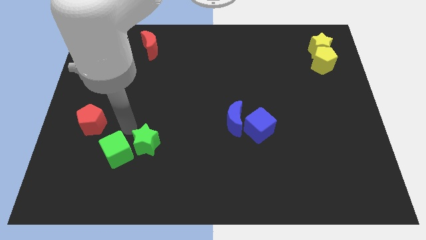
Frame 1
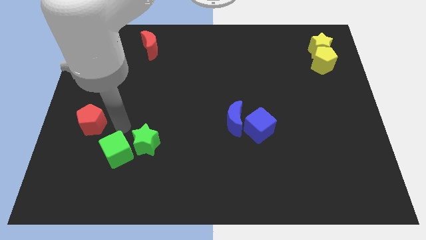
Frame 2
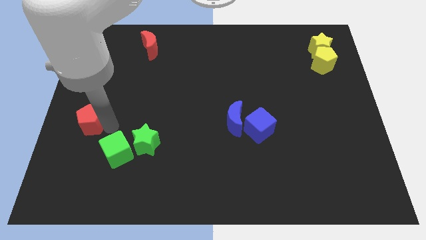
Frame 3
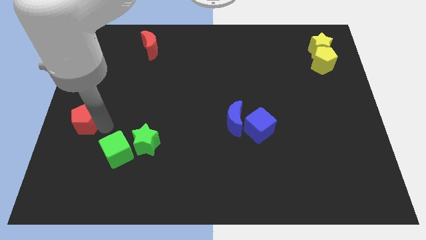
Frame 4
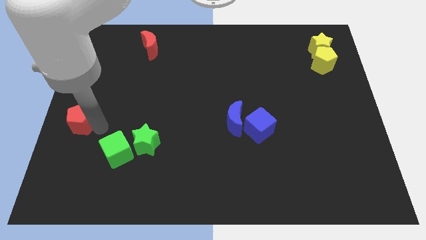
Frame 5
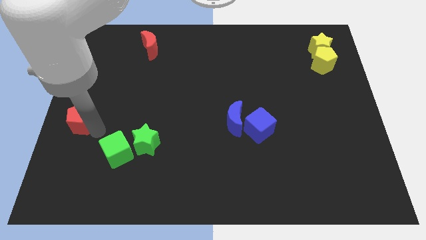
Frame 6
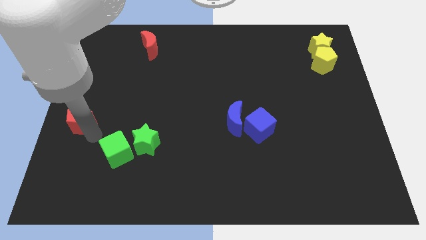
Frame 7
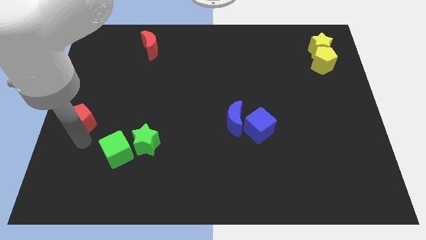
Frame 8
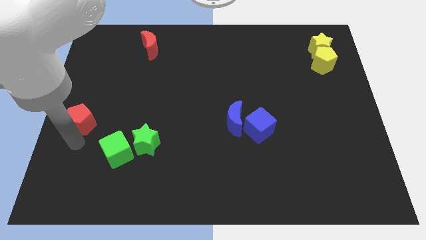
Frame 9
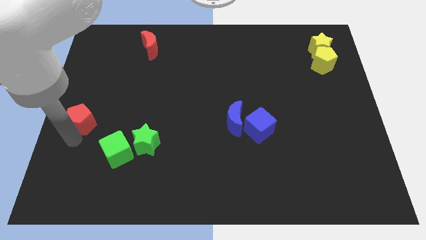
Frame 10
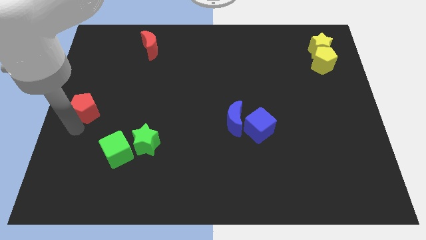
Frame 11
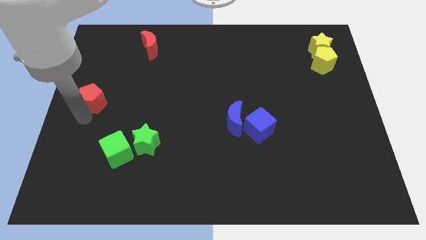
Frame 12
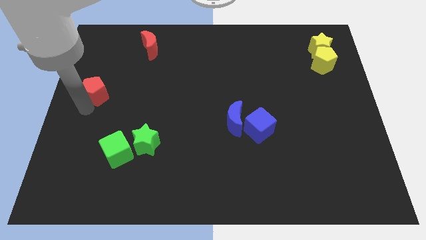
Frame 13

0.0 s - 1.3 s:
push red pentagon slightly to its top

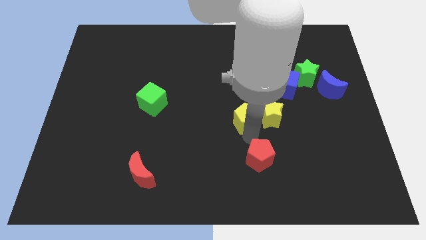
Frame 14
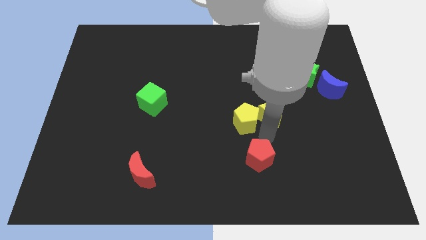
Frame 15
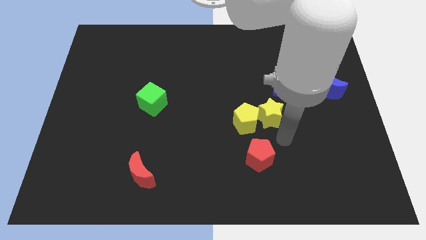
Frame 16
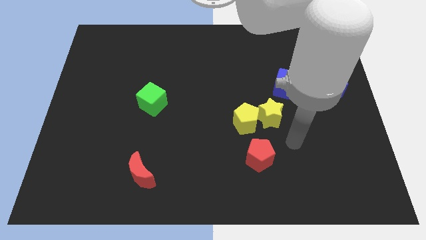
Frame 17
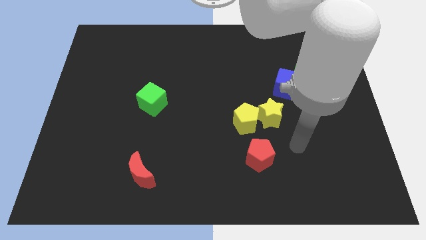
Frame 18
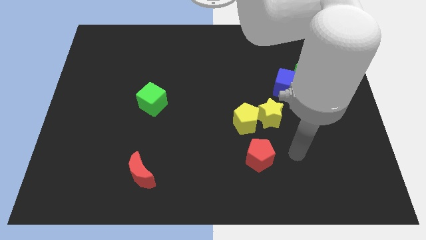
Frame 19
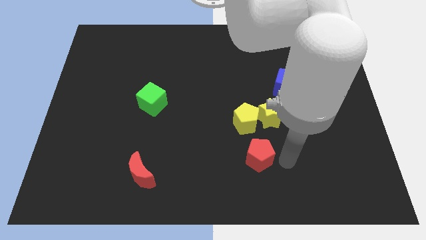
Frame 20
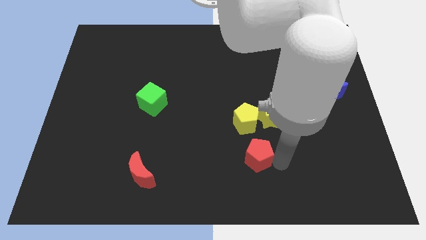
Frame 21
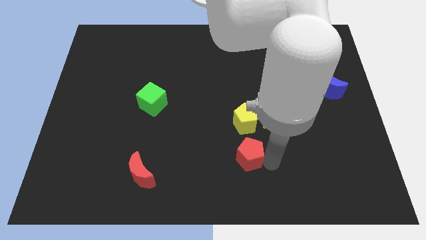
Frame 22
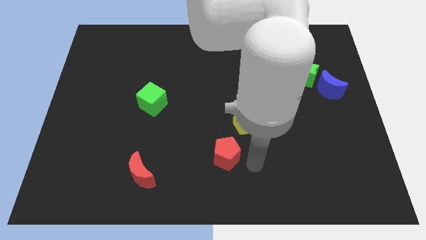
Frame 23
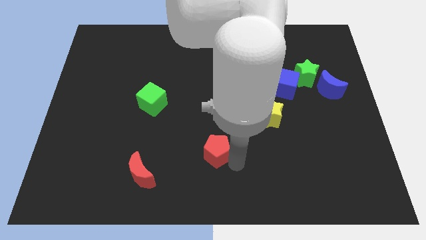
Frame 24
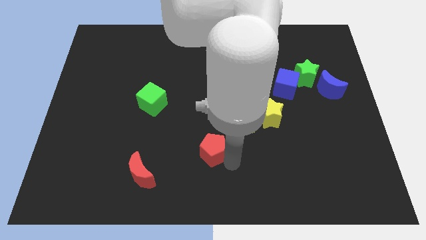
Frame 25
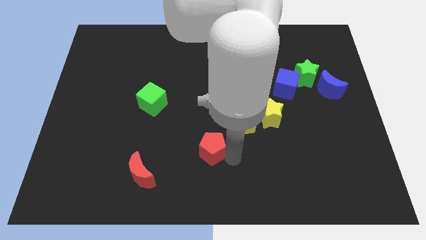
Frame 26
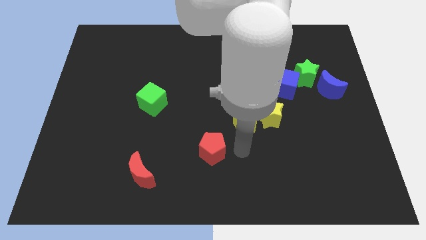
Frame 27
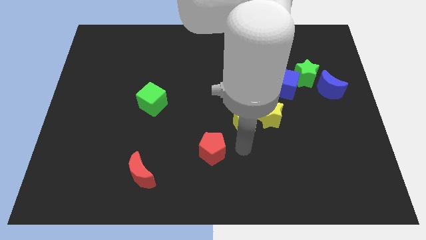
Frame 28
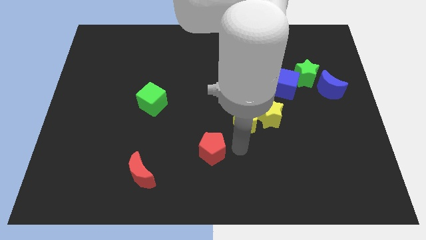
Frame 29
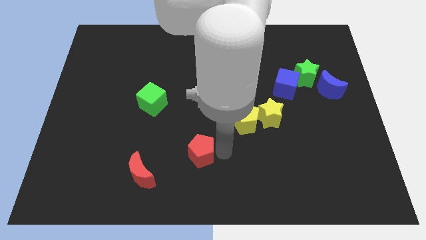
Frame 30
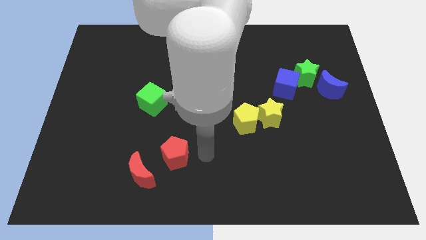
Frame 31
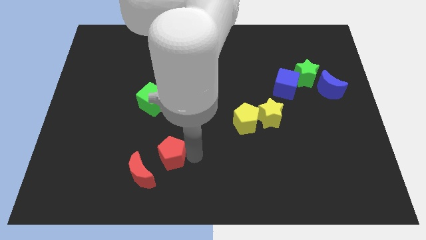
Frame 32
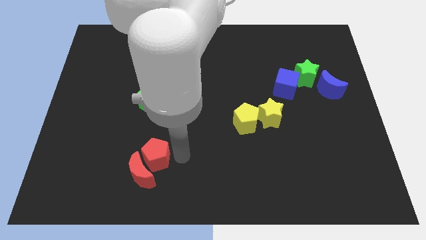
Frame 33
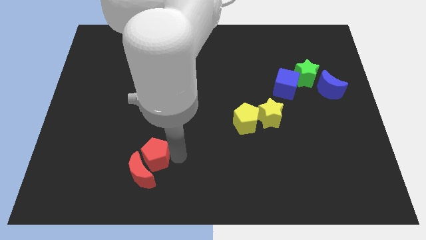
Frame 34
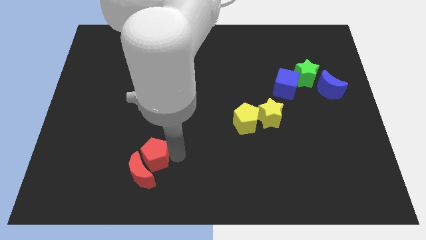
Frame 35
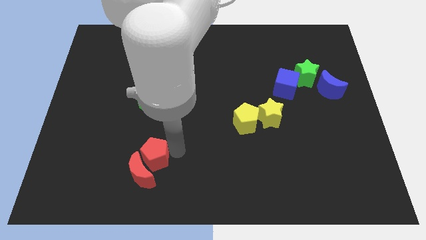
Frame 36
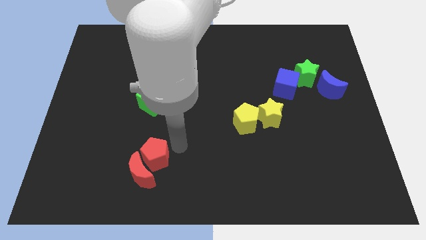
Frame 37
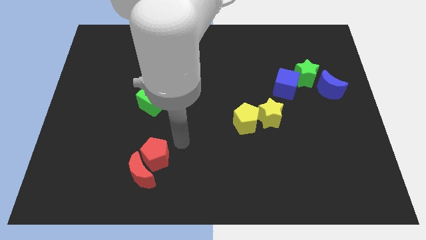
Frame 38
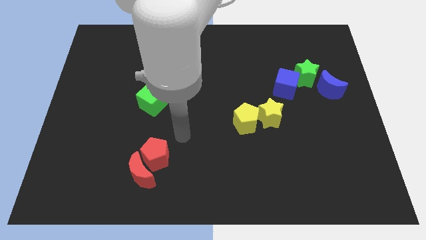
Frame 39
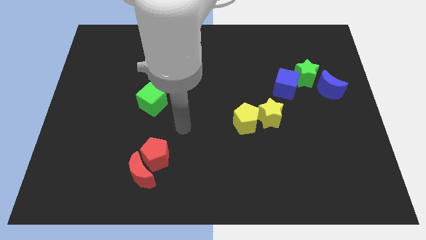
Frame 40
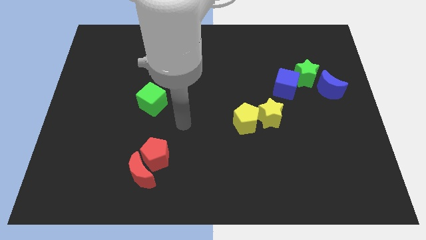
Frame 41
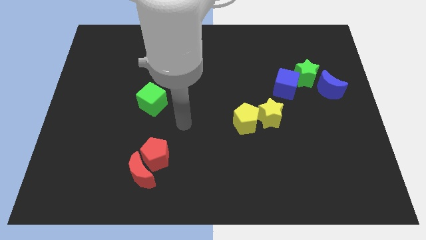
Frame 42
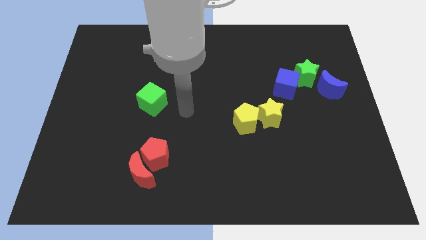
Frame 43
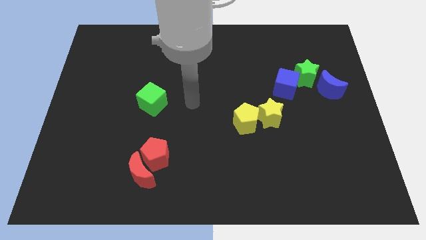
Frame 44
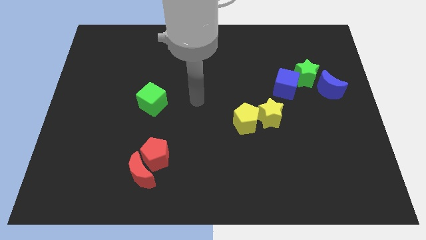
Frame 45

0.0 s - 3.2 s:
push the red pentagon close to the red moon

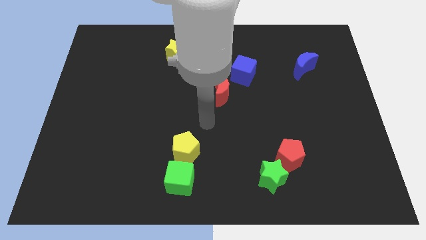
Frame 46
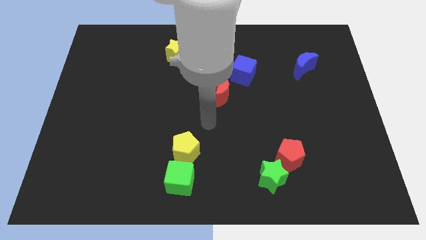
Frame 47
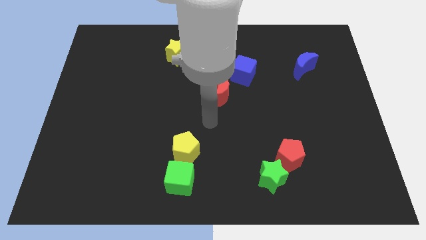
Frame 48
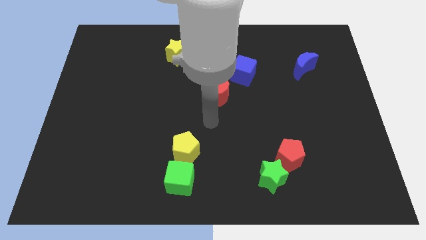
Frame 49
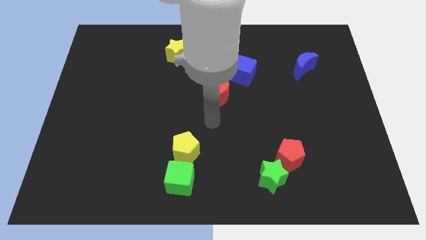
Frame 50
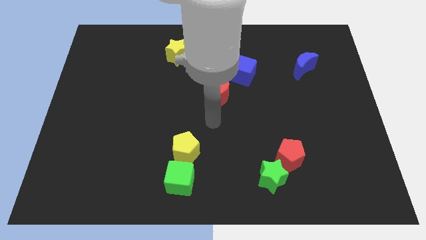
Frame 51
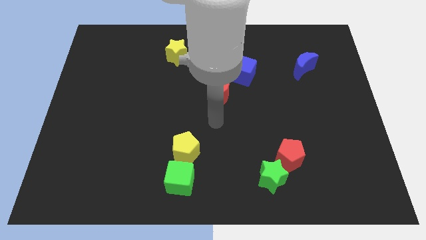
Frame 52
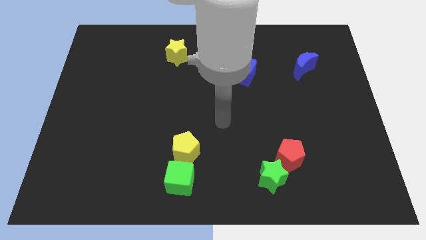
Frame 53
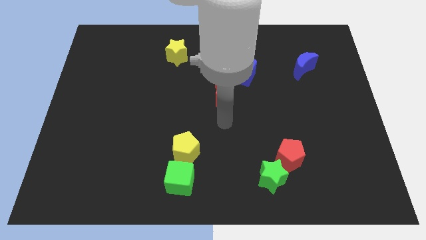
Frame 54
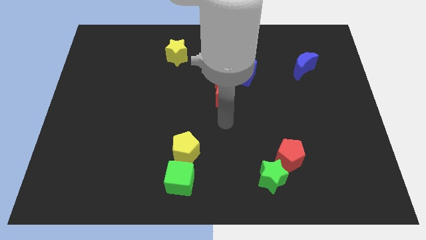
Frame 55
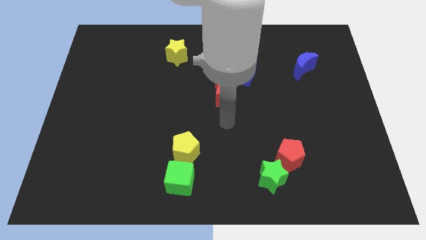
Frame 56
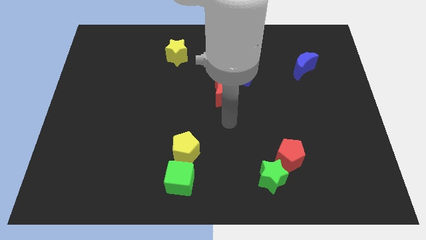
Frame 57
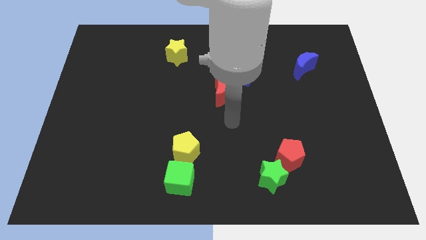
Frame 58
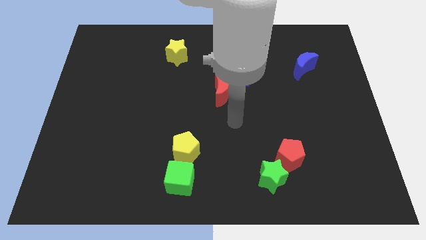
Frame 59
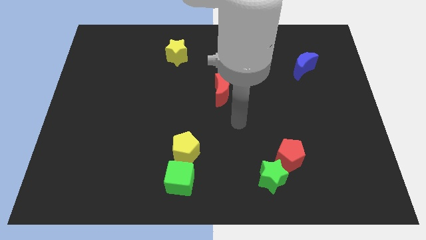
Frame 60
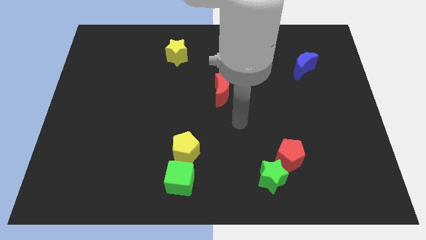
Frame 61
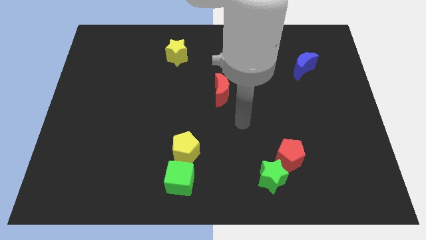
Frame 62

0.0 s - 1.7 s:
move your arm towards the right side of the board

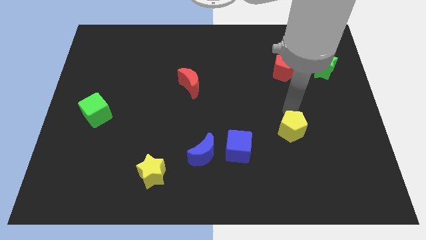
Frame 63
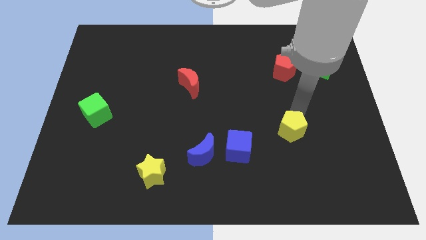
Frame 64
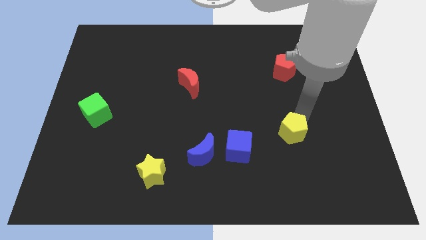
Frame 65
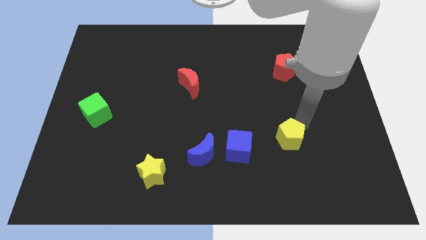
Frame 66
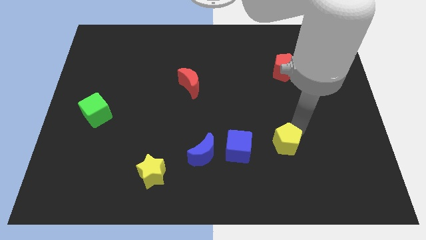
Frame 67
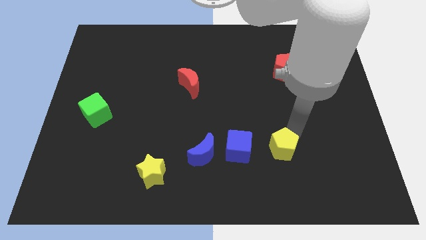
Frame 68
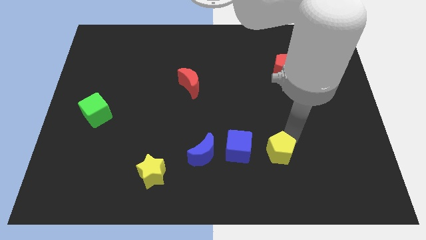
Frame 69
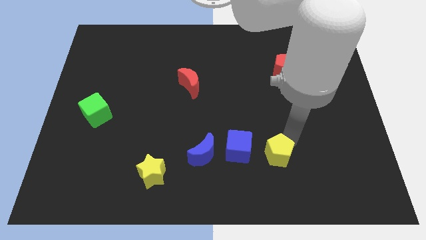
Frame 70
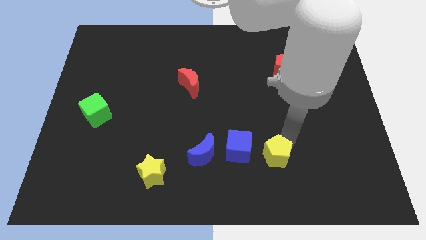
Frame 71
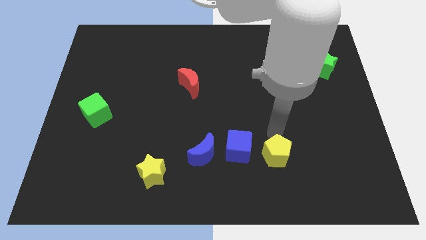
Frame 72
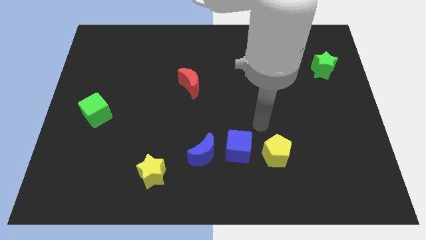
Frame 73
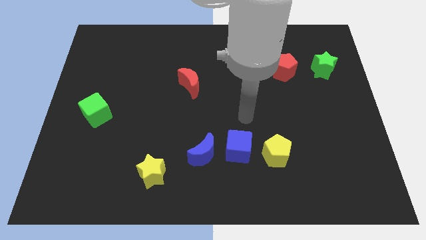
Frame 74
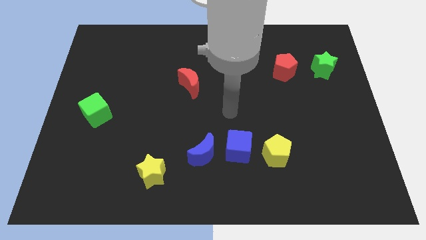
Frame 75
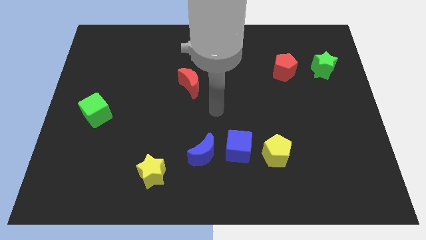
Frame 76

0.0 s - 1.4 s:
push the yellow pentagon towards the blue cube

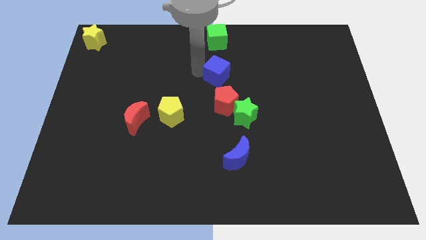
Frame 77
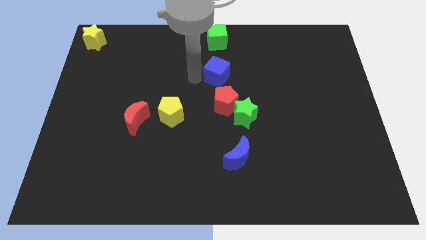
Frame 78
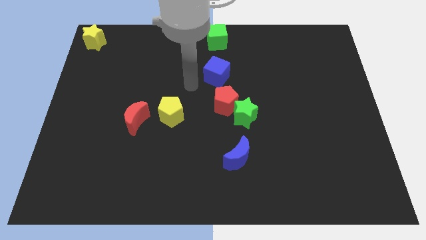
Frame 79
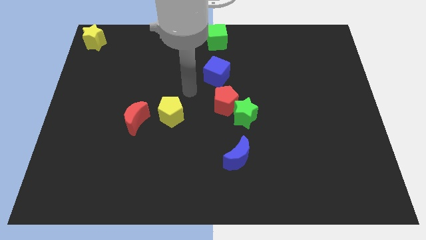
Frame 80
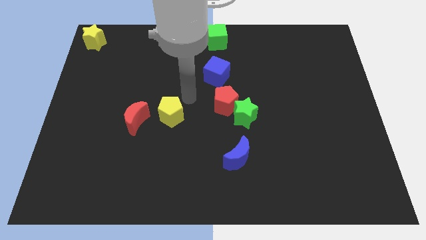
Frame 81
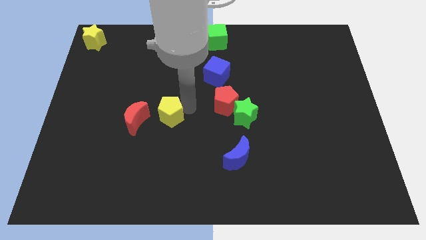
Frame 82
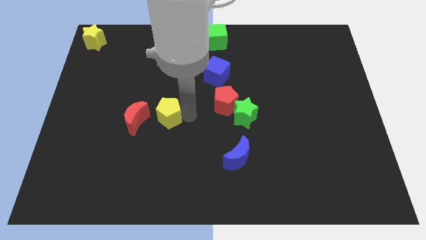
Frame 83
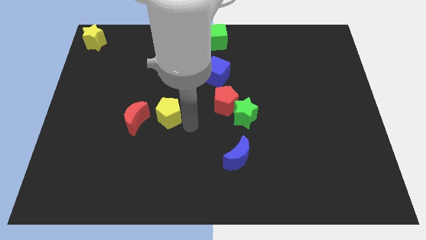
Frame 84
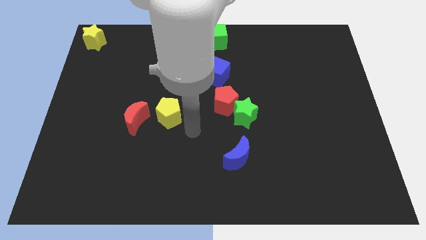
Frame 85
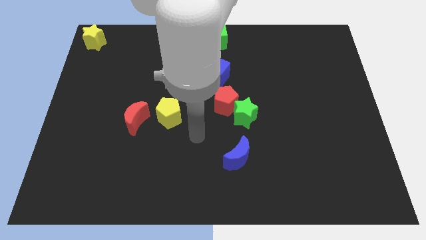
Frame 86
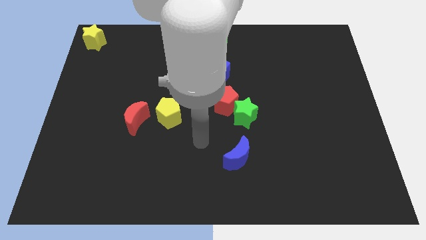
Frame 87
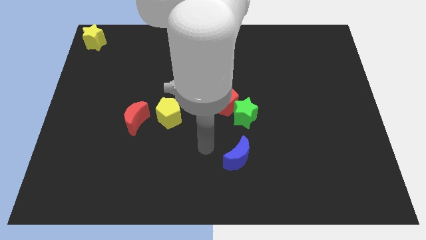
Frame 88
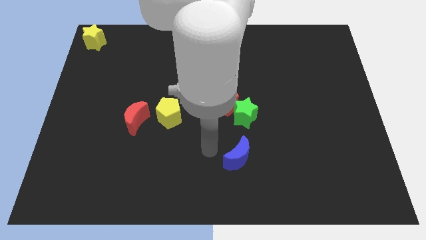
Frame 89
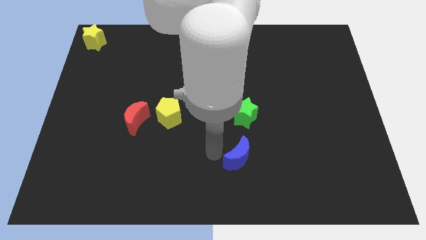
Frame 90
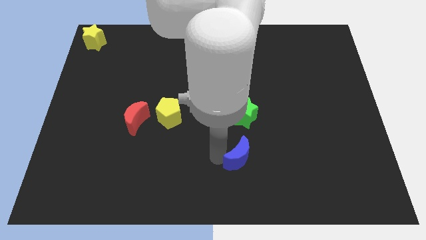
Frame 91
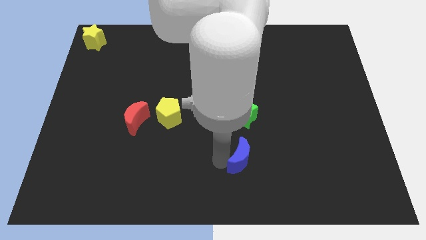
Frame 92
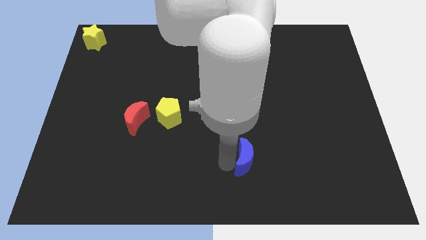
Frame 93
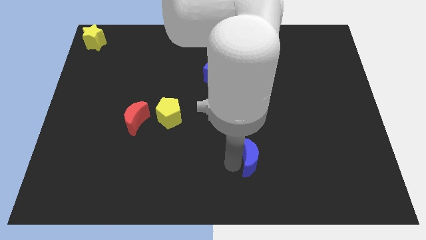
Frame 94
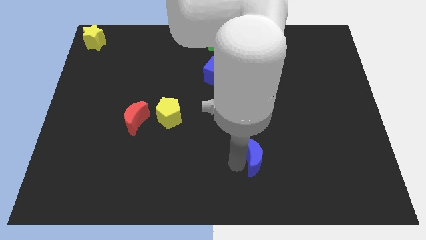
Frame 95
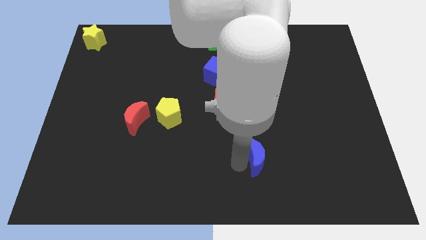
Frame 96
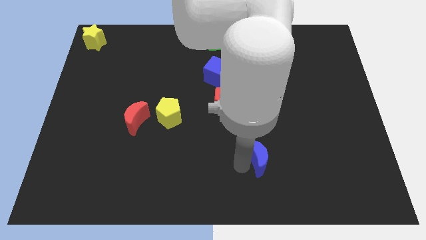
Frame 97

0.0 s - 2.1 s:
slightly move the blue moon to the right side of the board
